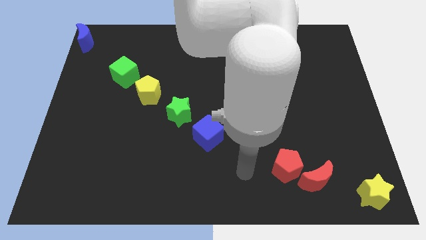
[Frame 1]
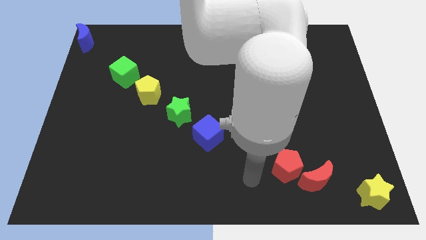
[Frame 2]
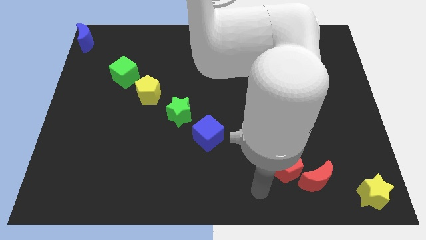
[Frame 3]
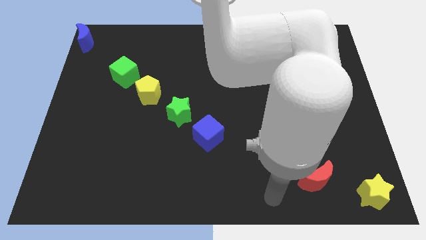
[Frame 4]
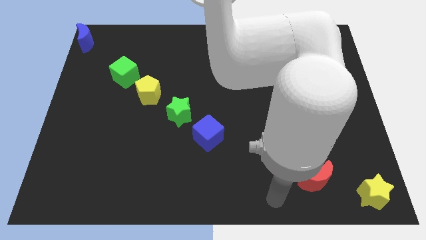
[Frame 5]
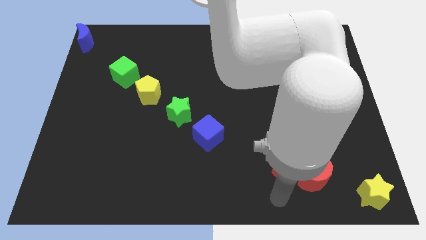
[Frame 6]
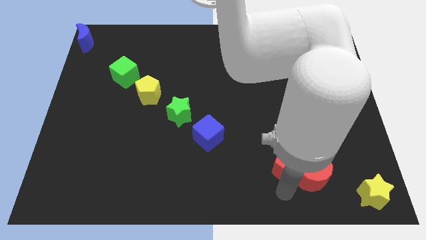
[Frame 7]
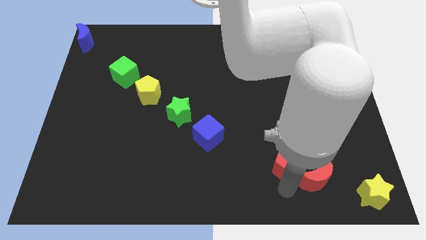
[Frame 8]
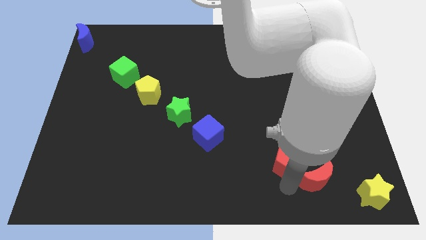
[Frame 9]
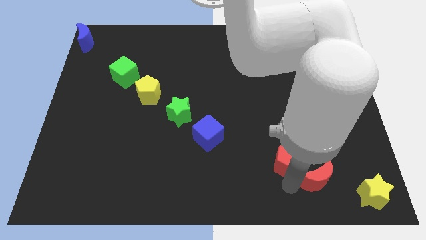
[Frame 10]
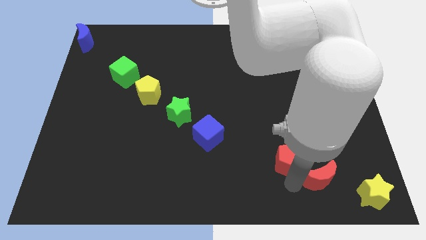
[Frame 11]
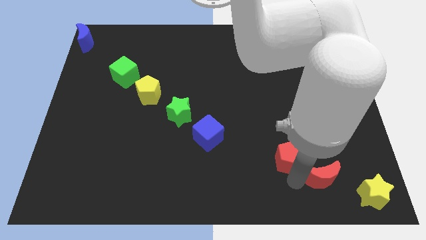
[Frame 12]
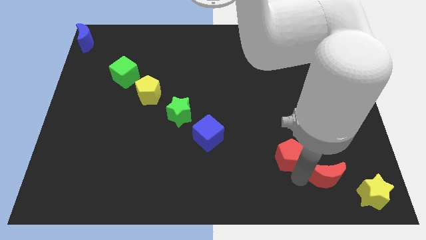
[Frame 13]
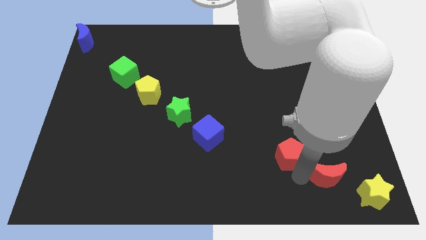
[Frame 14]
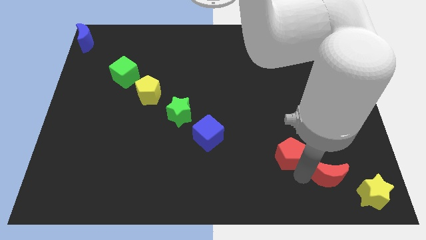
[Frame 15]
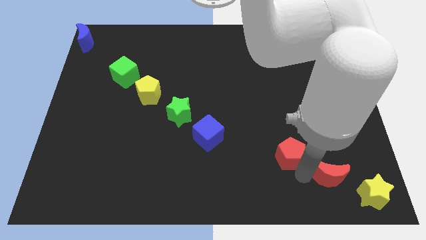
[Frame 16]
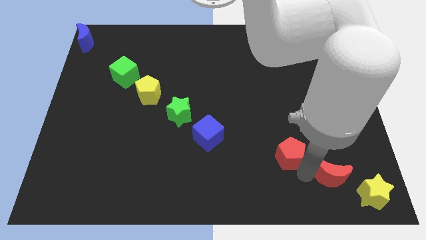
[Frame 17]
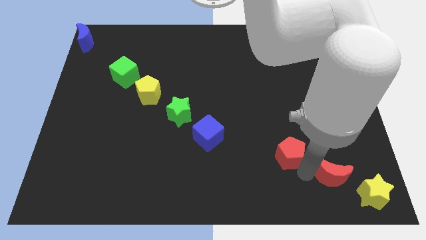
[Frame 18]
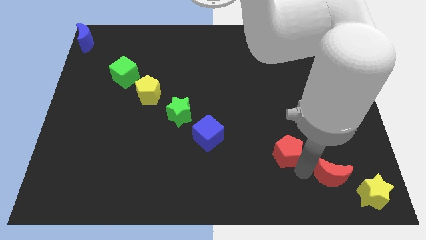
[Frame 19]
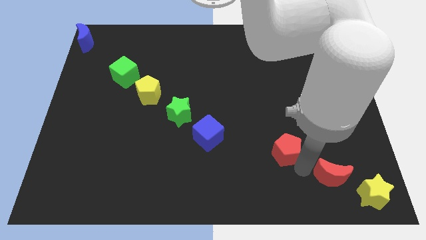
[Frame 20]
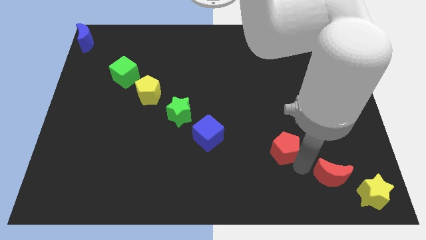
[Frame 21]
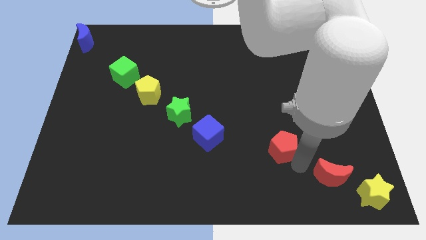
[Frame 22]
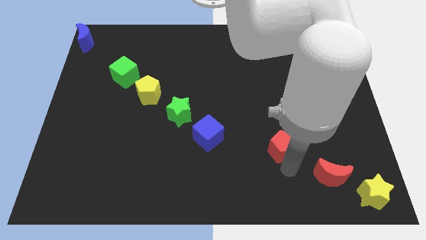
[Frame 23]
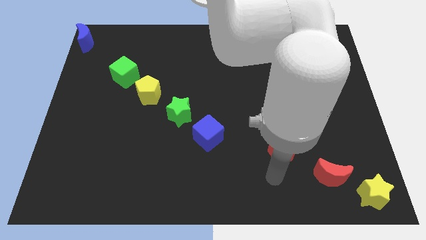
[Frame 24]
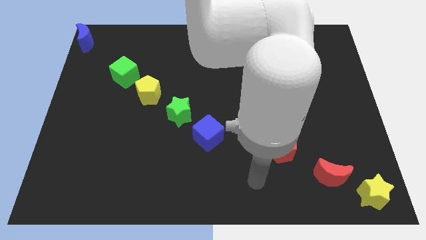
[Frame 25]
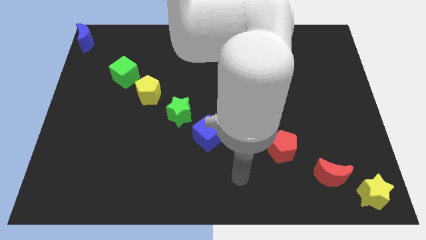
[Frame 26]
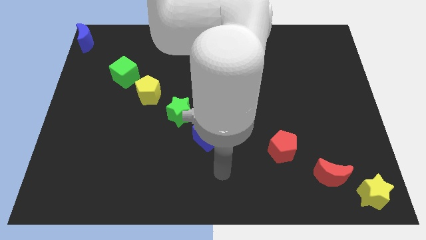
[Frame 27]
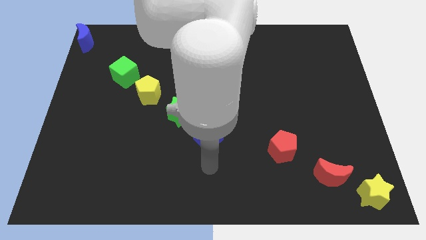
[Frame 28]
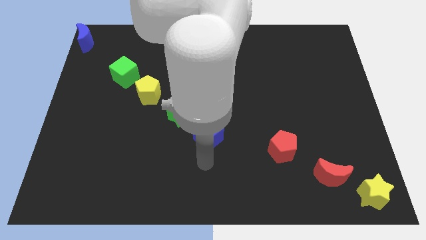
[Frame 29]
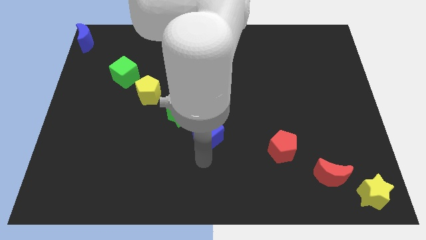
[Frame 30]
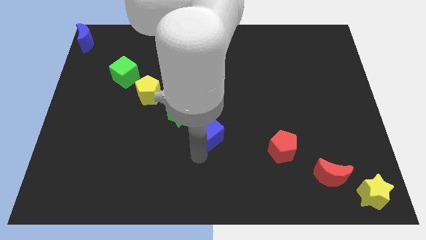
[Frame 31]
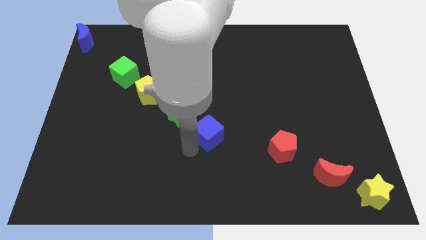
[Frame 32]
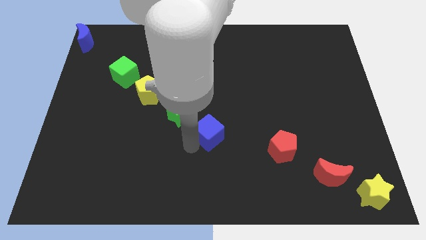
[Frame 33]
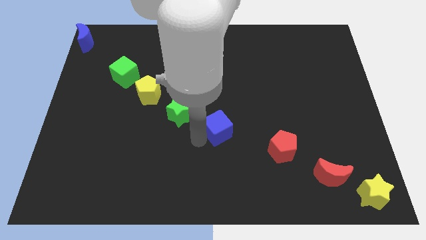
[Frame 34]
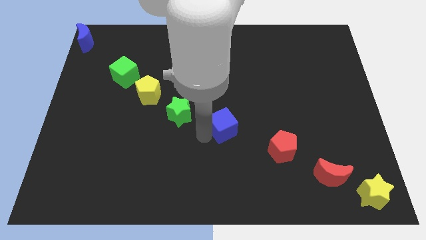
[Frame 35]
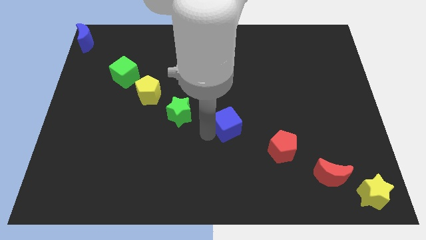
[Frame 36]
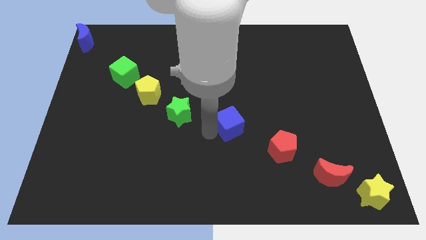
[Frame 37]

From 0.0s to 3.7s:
place the red pentagon diagonally in between the red moon and blue cube

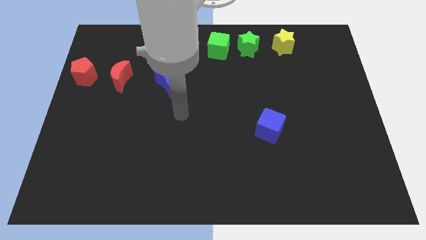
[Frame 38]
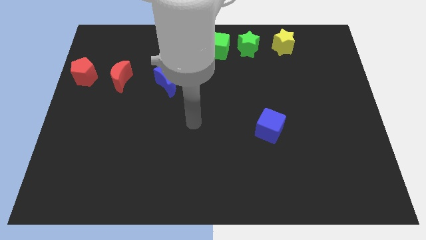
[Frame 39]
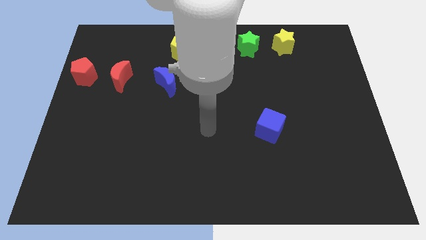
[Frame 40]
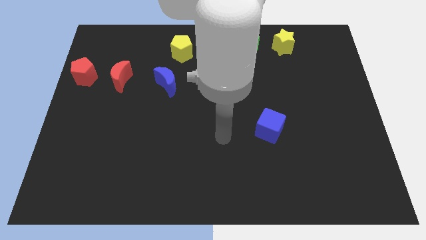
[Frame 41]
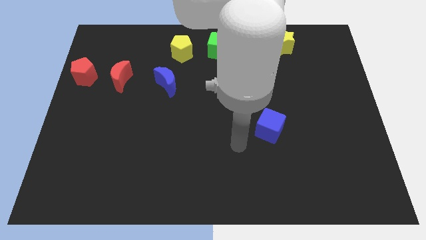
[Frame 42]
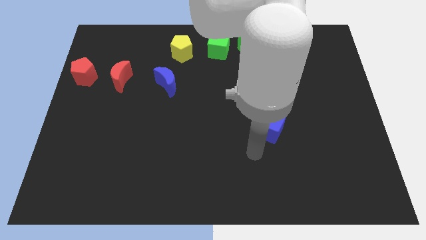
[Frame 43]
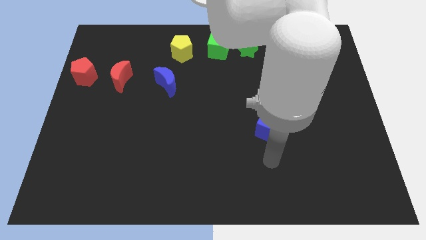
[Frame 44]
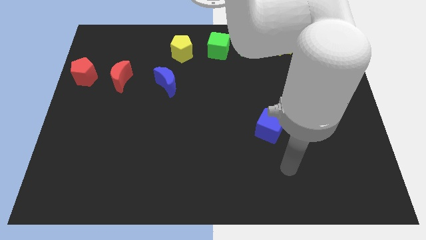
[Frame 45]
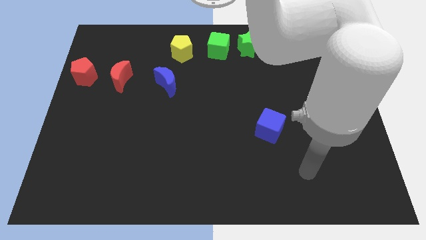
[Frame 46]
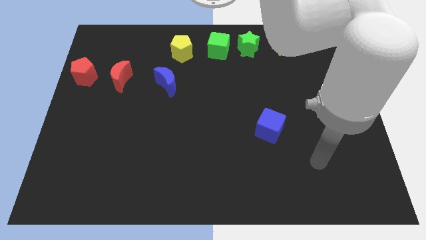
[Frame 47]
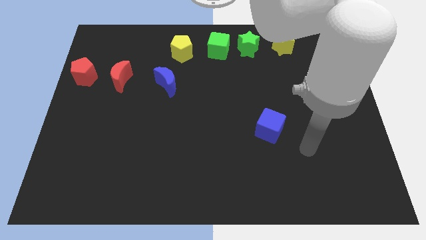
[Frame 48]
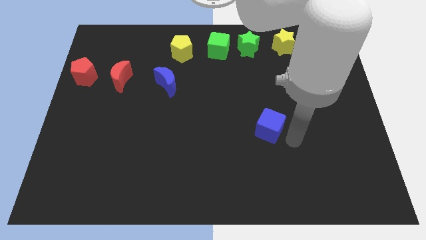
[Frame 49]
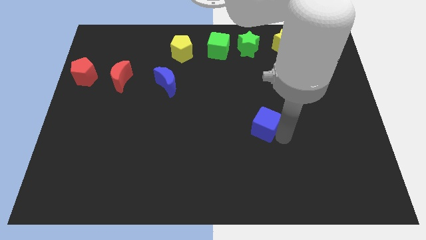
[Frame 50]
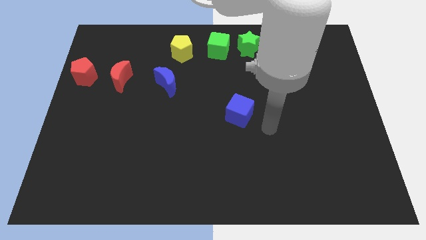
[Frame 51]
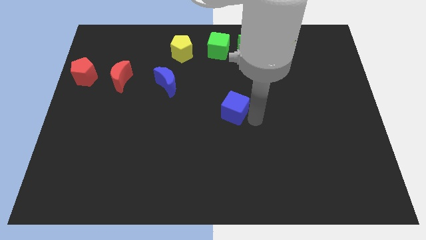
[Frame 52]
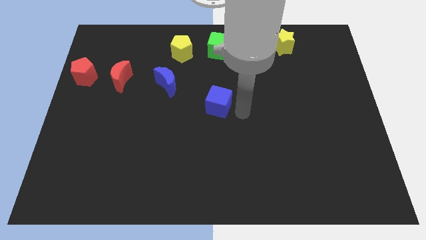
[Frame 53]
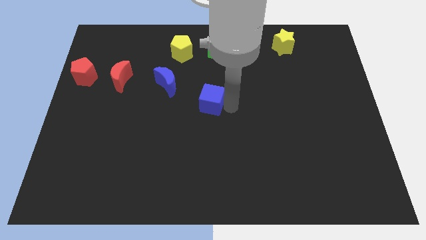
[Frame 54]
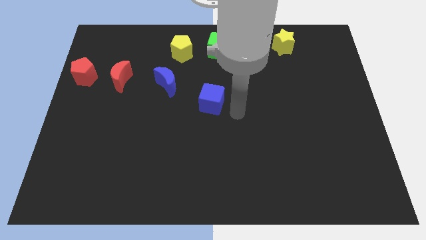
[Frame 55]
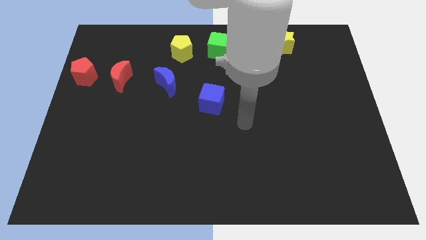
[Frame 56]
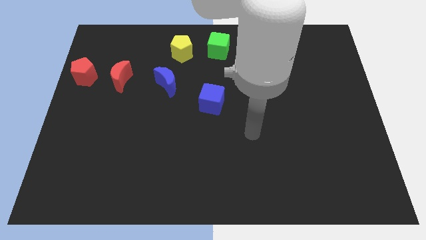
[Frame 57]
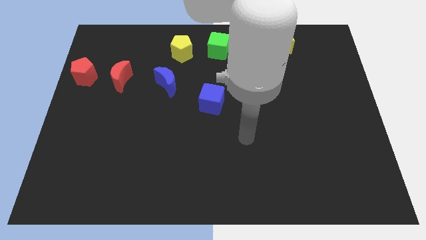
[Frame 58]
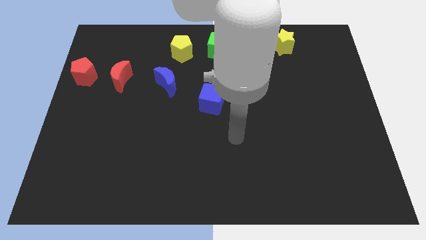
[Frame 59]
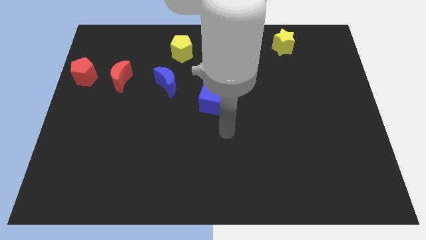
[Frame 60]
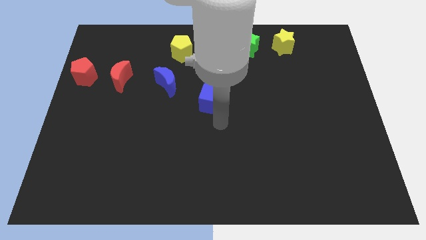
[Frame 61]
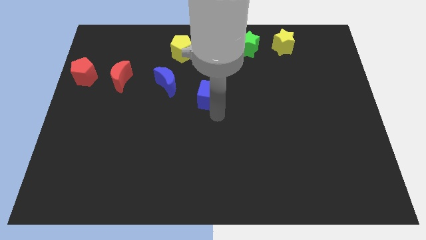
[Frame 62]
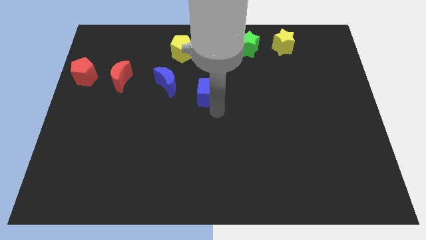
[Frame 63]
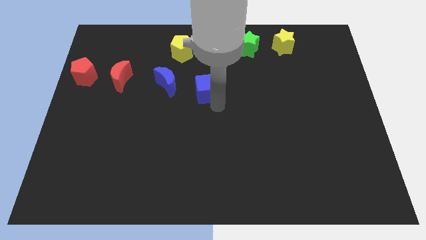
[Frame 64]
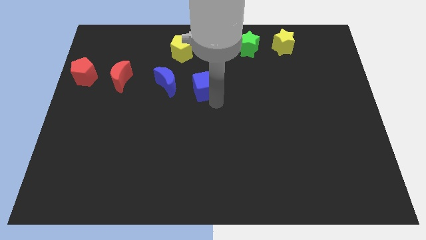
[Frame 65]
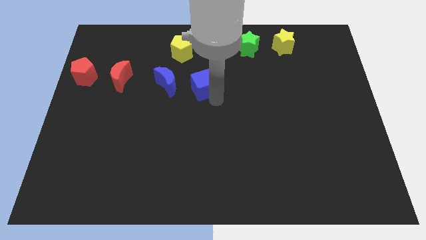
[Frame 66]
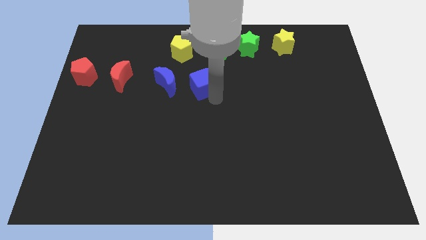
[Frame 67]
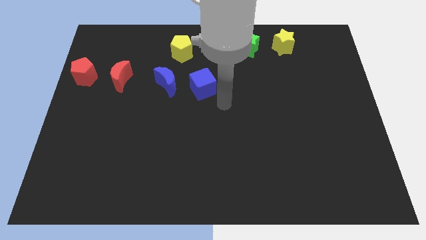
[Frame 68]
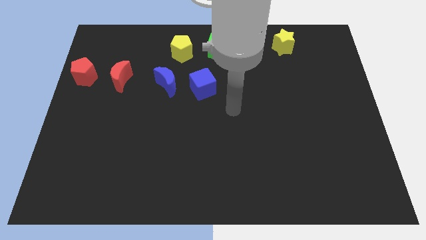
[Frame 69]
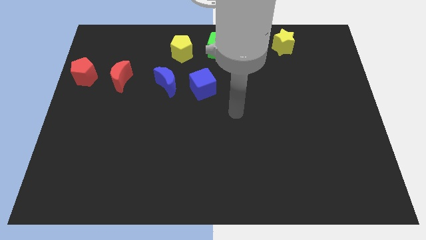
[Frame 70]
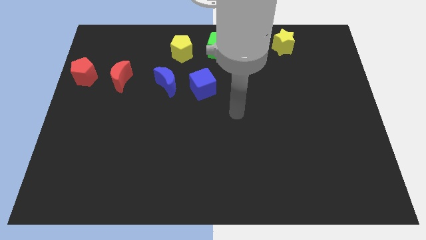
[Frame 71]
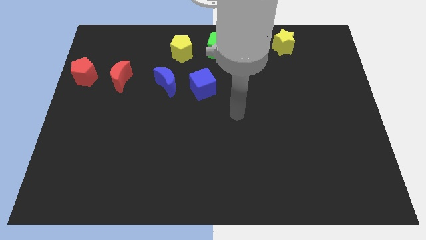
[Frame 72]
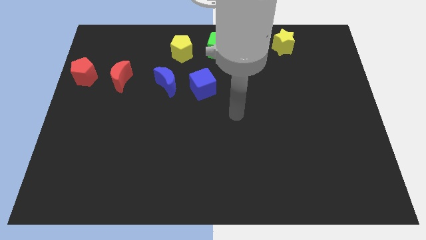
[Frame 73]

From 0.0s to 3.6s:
adjust the blue cube on the right side of the blue crescent

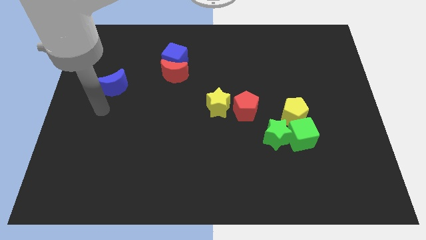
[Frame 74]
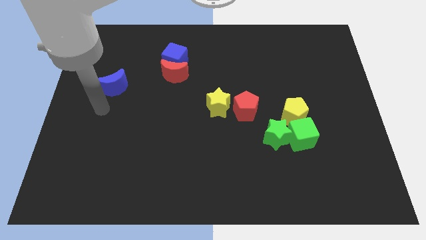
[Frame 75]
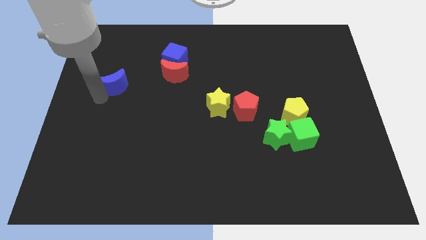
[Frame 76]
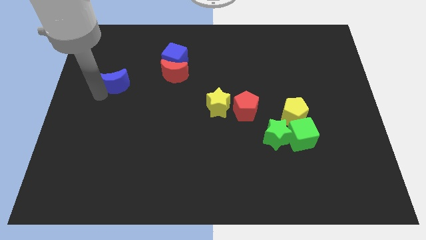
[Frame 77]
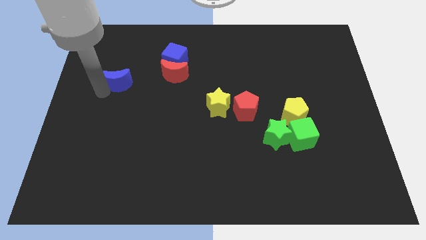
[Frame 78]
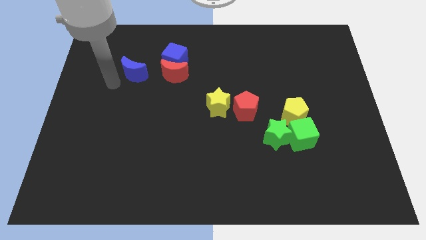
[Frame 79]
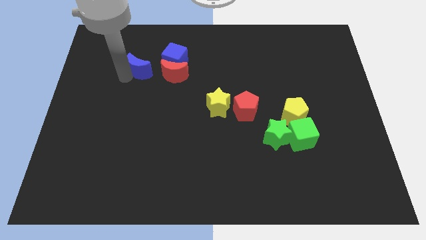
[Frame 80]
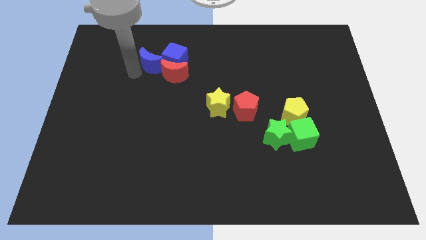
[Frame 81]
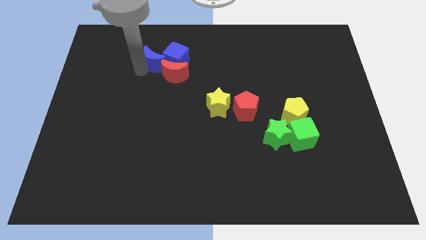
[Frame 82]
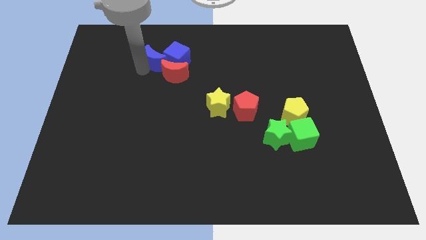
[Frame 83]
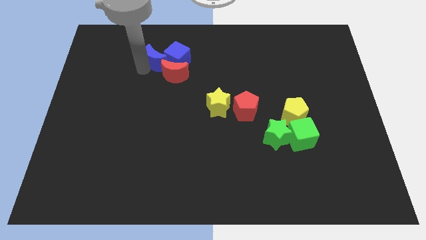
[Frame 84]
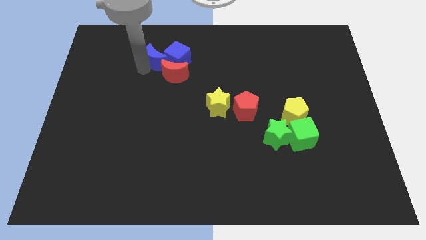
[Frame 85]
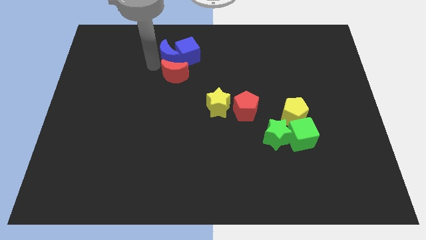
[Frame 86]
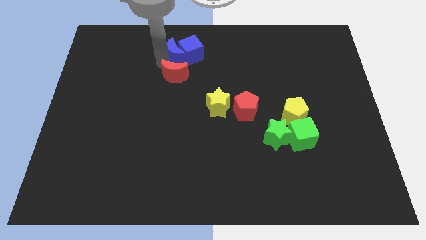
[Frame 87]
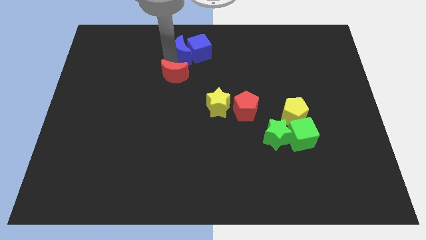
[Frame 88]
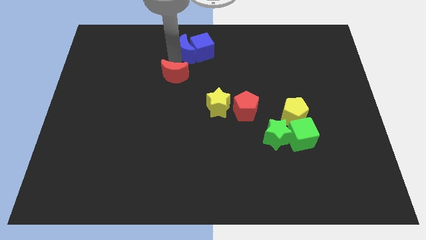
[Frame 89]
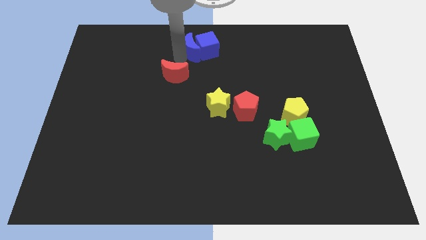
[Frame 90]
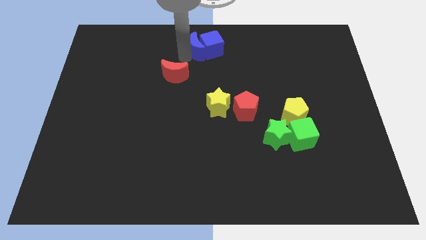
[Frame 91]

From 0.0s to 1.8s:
push the blue moon into the blue cube
